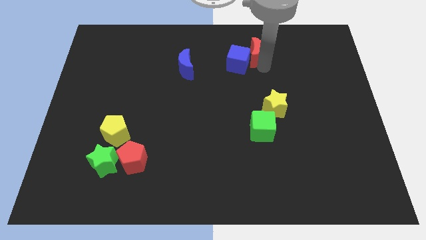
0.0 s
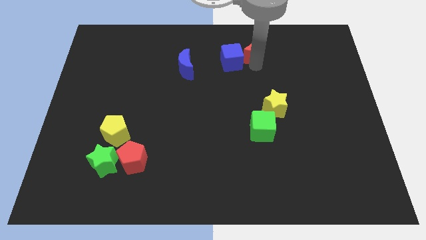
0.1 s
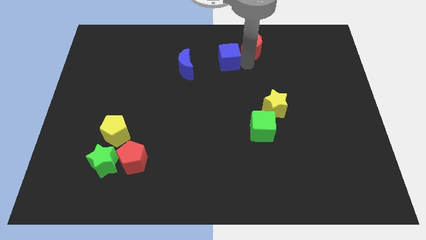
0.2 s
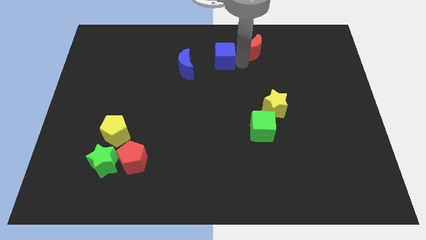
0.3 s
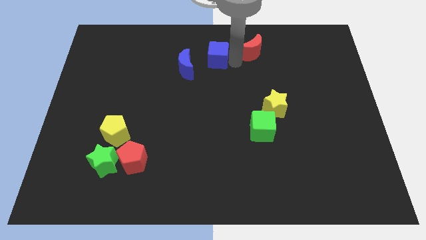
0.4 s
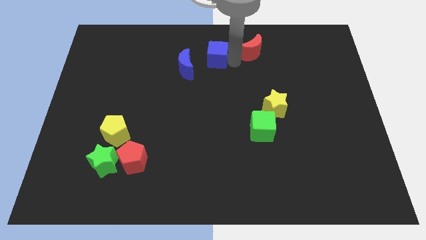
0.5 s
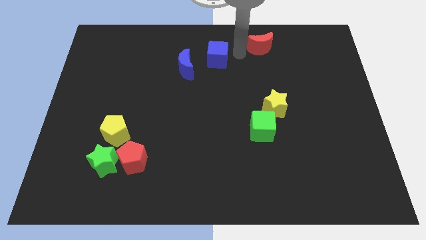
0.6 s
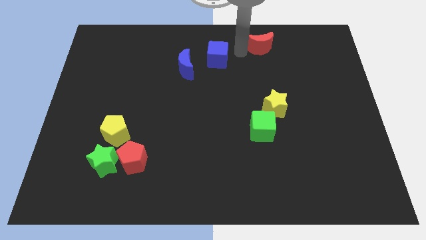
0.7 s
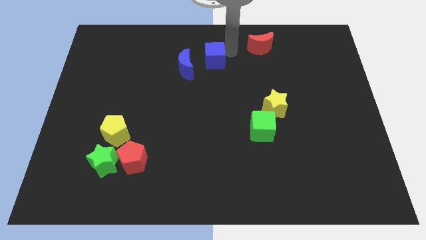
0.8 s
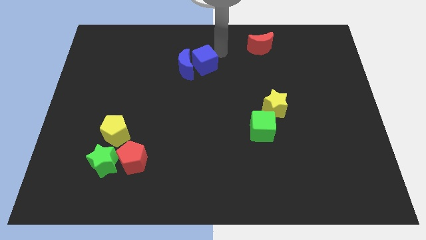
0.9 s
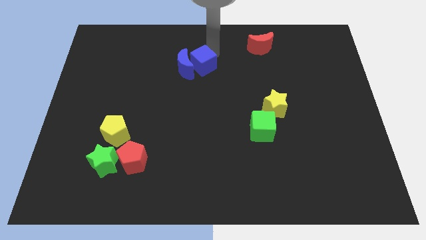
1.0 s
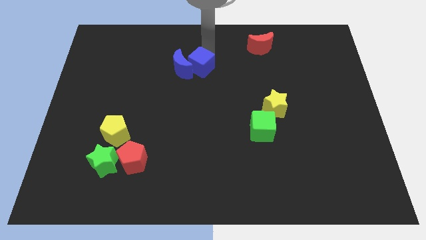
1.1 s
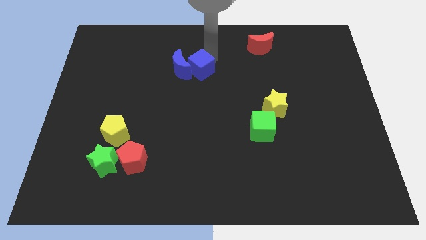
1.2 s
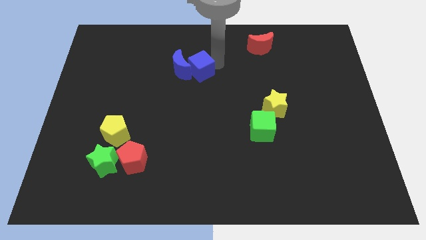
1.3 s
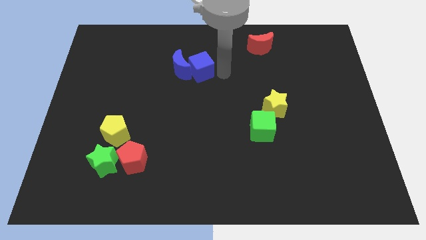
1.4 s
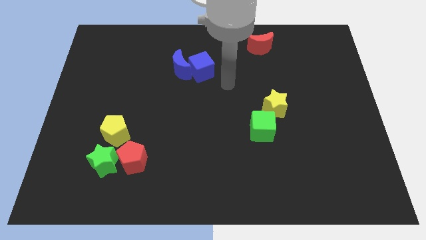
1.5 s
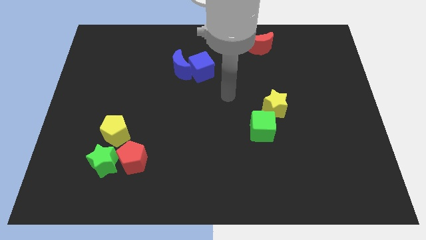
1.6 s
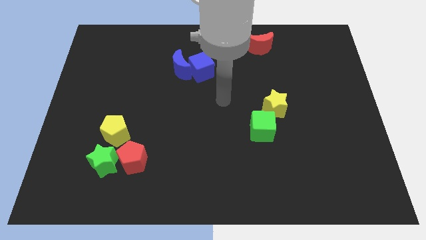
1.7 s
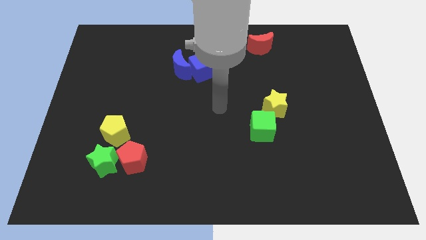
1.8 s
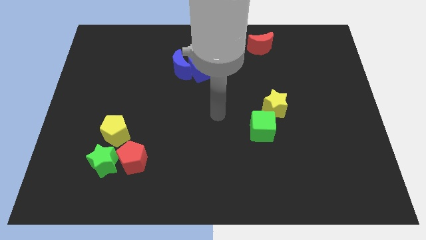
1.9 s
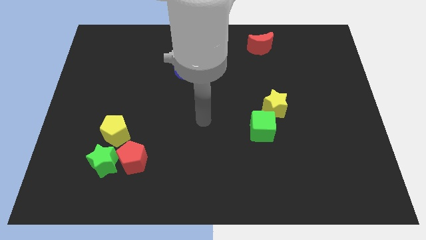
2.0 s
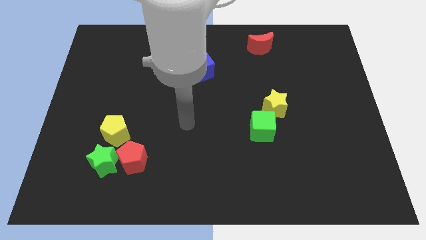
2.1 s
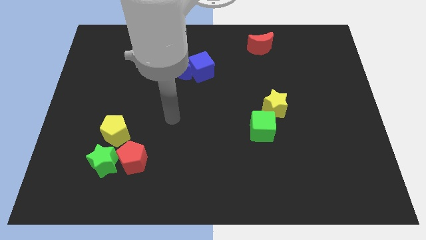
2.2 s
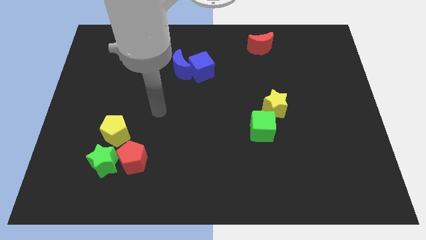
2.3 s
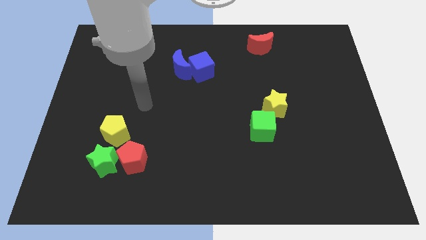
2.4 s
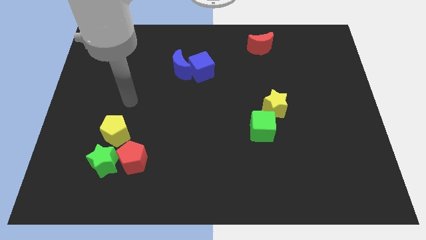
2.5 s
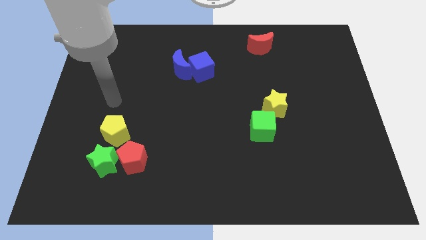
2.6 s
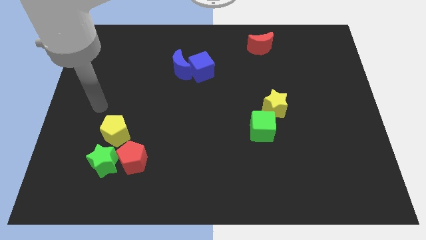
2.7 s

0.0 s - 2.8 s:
move the blue cube into the blue moon

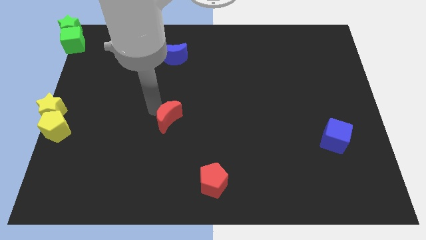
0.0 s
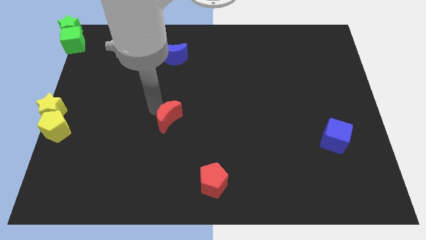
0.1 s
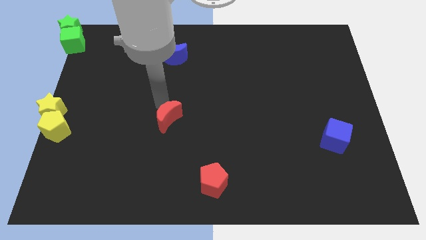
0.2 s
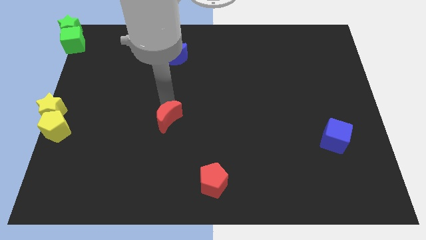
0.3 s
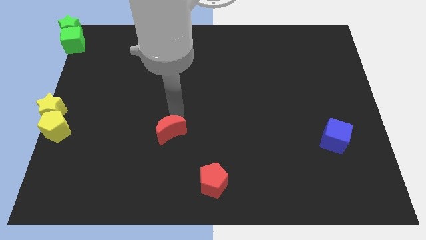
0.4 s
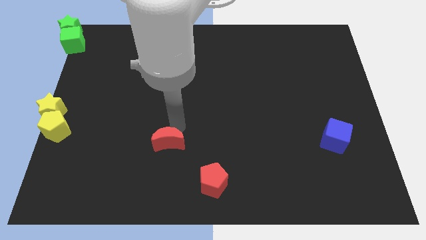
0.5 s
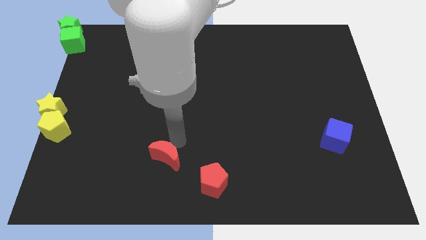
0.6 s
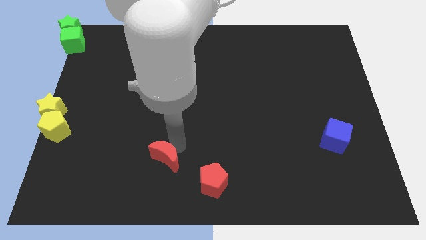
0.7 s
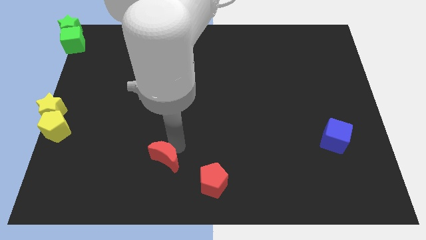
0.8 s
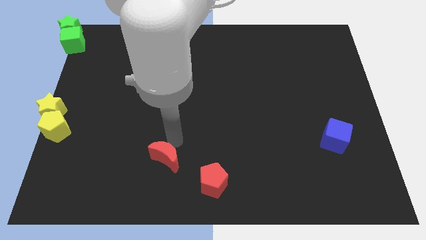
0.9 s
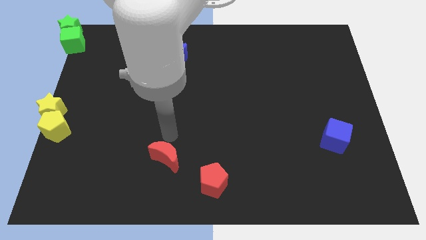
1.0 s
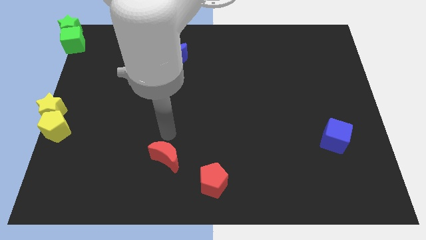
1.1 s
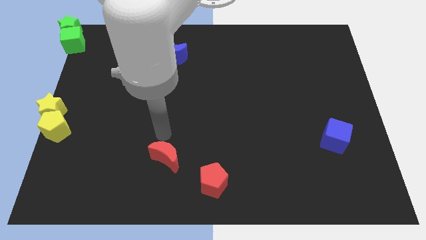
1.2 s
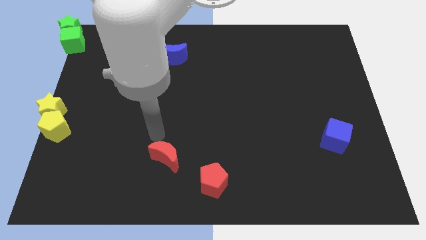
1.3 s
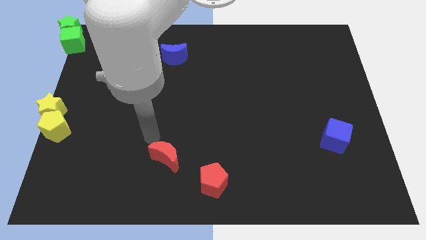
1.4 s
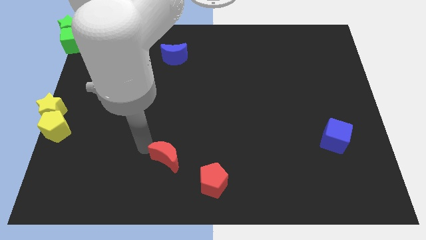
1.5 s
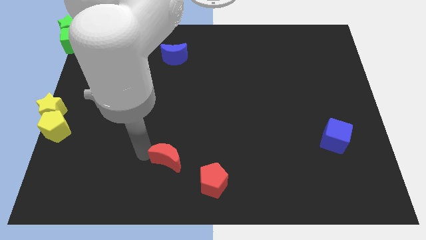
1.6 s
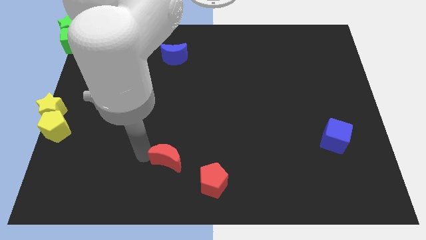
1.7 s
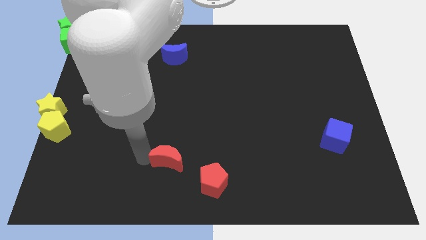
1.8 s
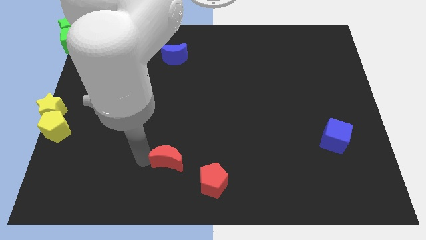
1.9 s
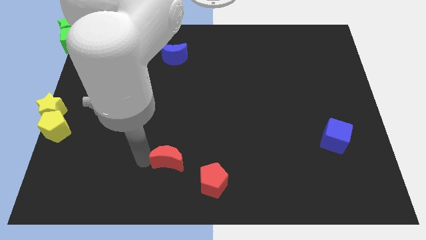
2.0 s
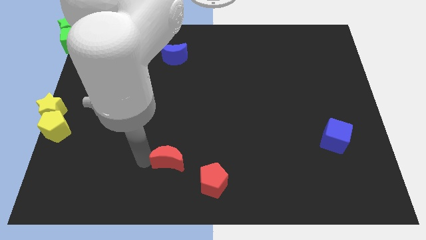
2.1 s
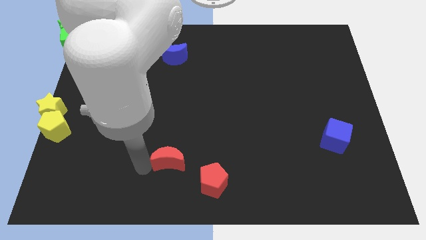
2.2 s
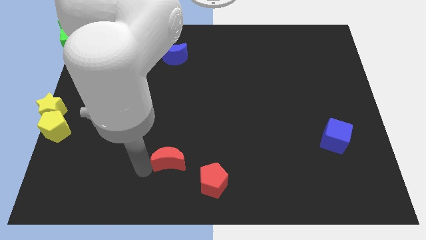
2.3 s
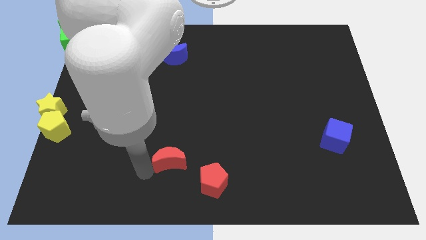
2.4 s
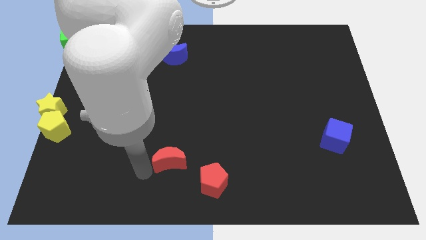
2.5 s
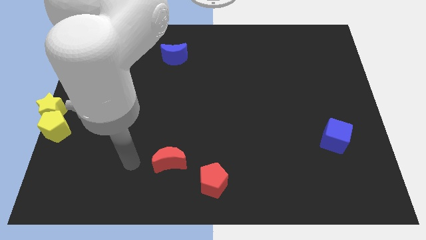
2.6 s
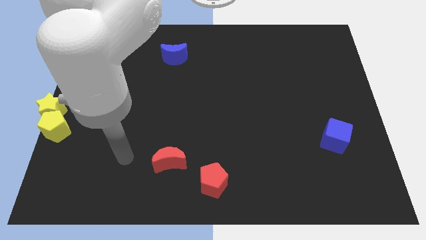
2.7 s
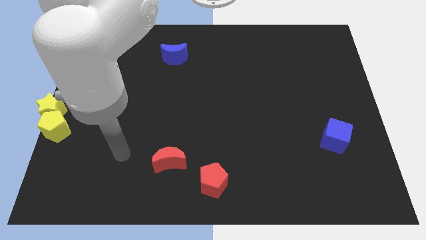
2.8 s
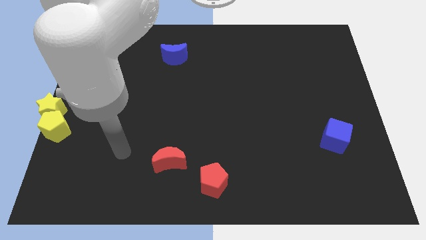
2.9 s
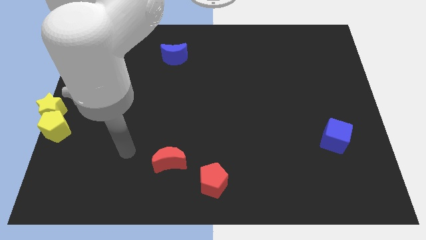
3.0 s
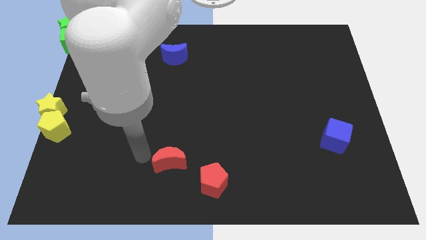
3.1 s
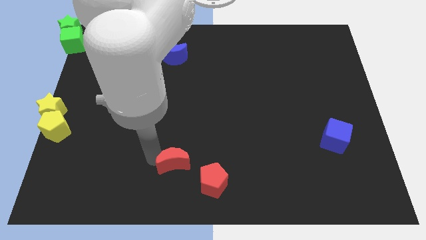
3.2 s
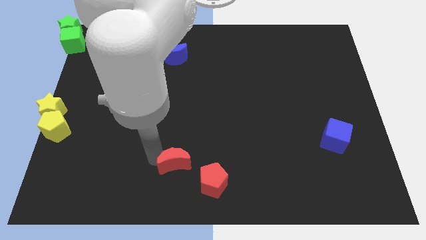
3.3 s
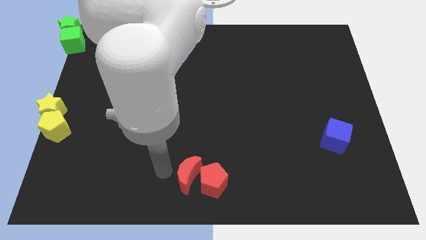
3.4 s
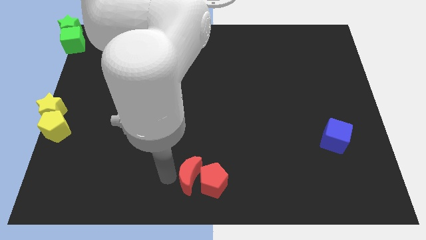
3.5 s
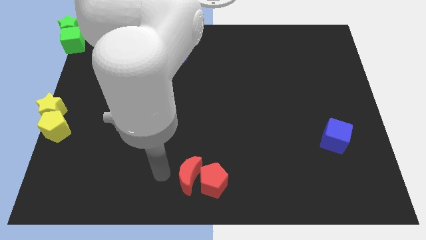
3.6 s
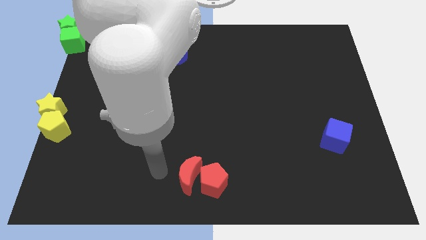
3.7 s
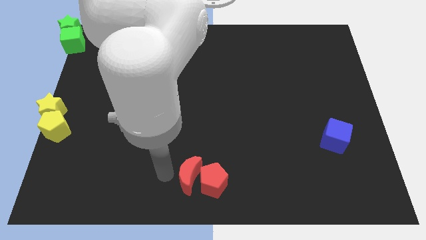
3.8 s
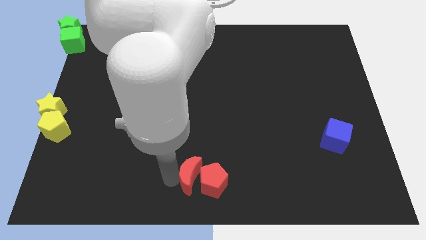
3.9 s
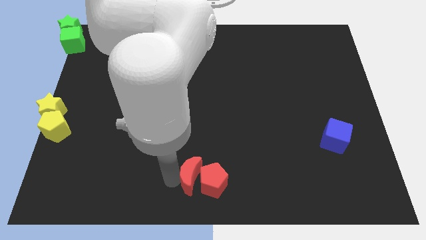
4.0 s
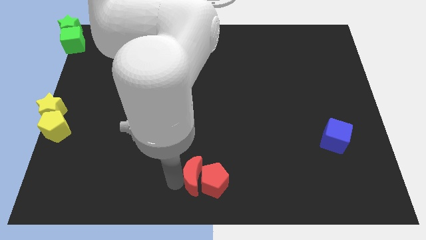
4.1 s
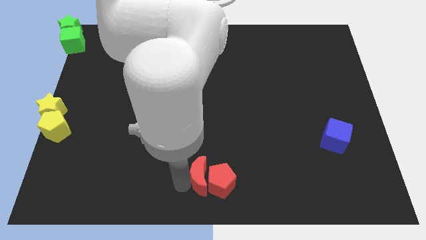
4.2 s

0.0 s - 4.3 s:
place red crescent near red pentagon

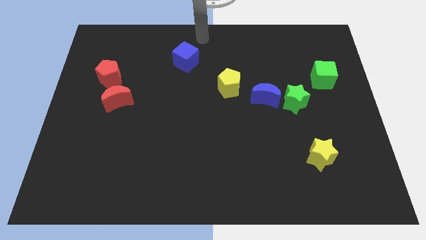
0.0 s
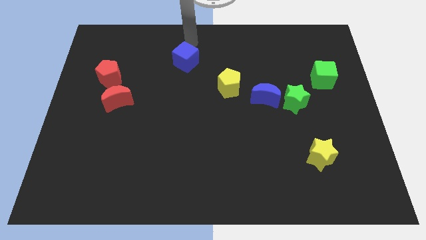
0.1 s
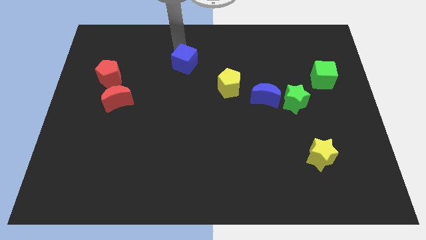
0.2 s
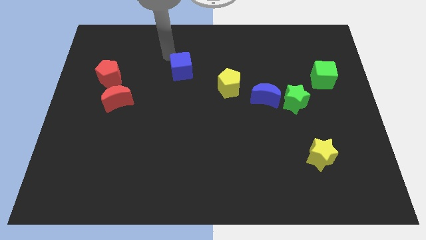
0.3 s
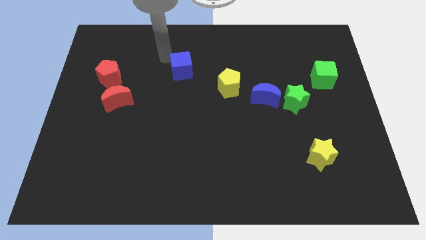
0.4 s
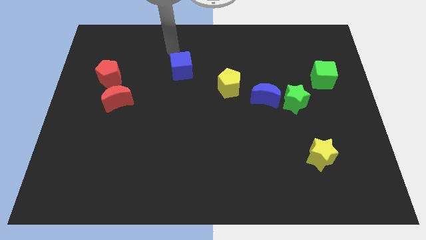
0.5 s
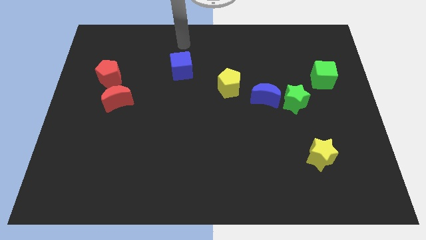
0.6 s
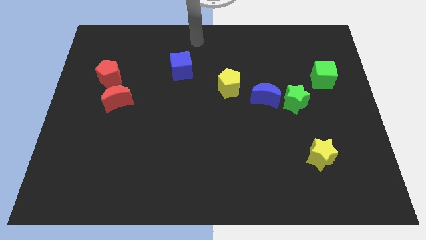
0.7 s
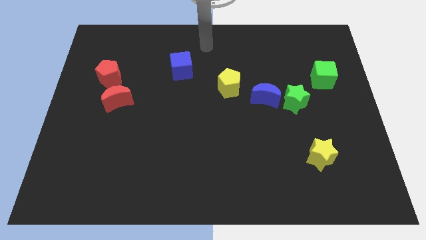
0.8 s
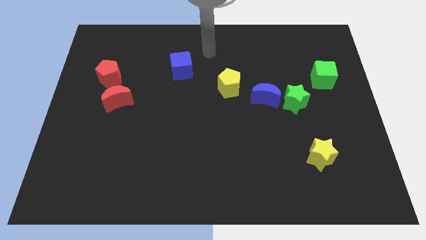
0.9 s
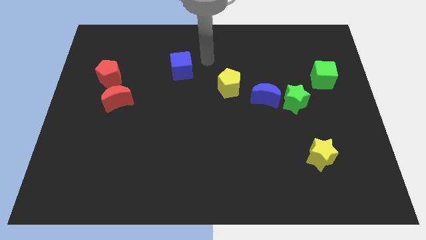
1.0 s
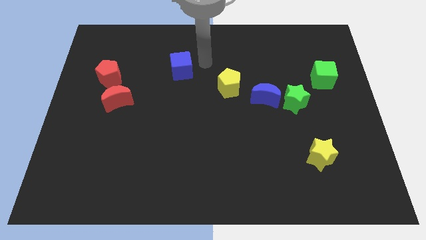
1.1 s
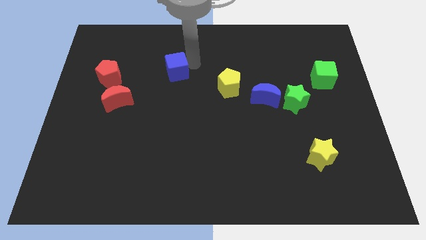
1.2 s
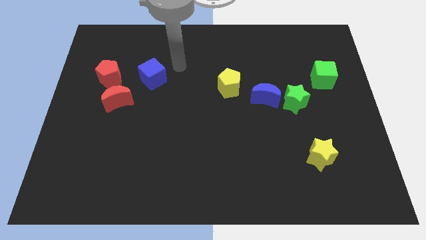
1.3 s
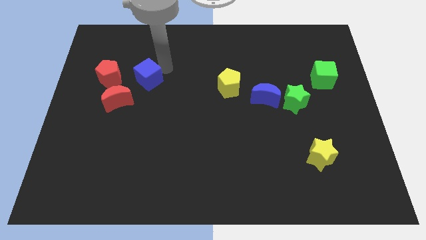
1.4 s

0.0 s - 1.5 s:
drag the blue cube towards the red blocks

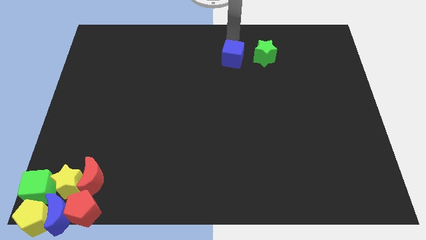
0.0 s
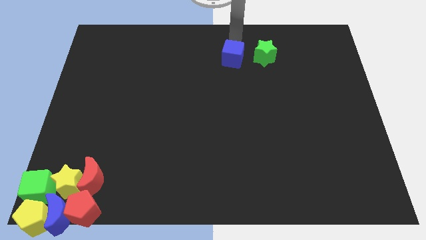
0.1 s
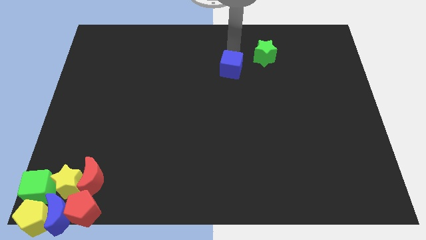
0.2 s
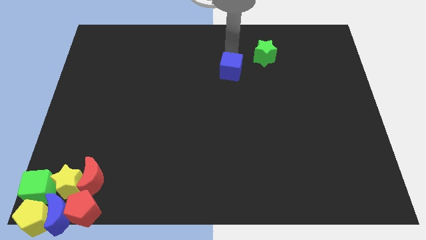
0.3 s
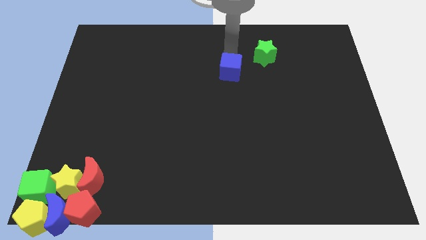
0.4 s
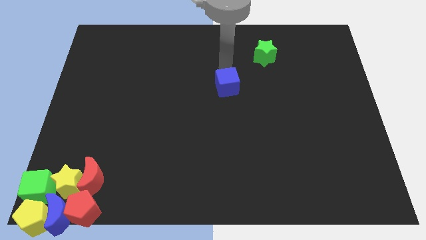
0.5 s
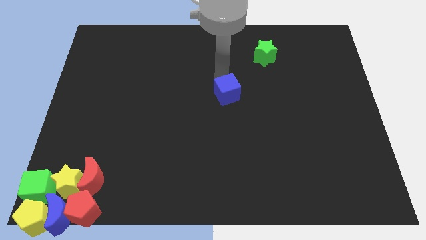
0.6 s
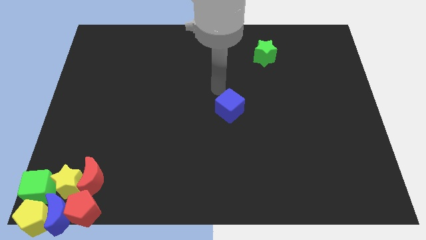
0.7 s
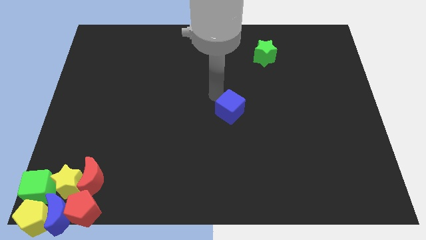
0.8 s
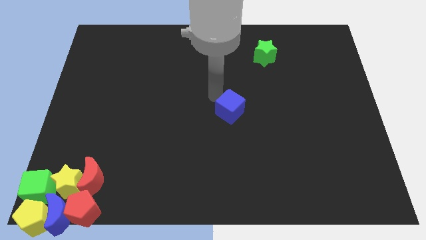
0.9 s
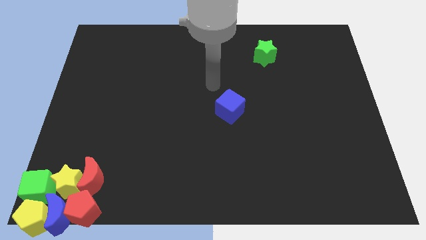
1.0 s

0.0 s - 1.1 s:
push the blue cube towards the bottom center of the board
